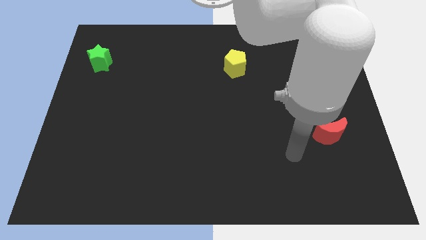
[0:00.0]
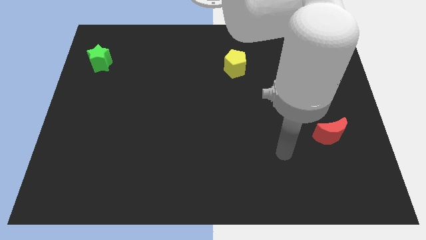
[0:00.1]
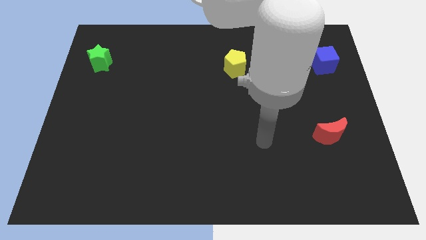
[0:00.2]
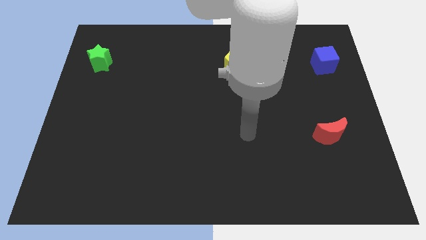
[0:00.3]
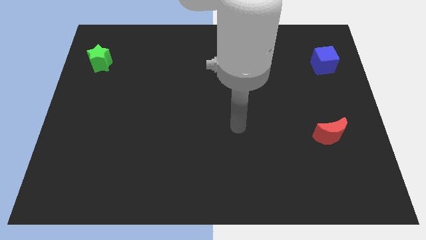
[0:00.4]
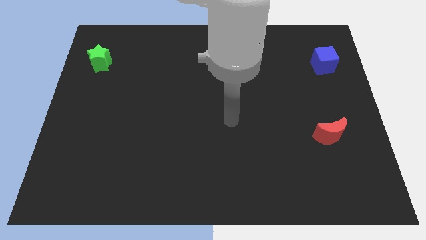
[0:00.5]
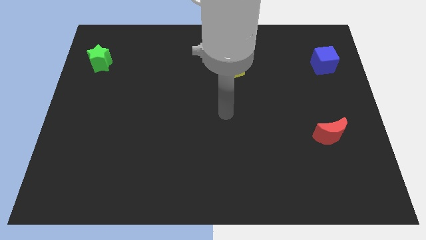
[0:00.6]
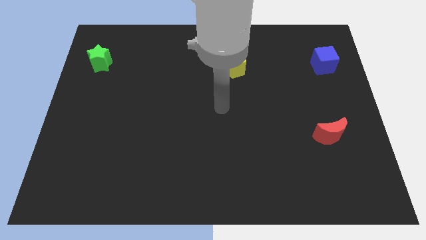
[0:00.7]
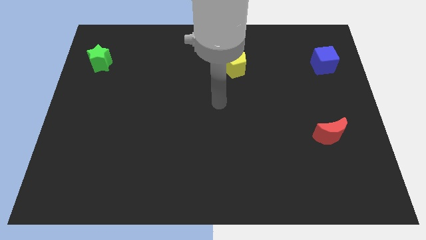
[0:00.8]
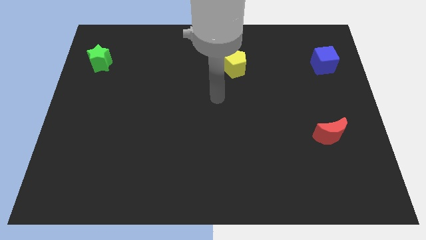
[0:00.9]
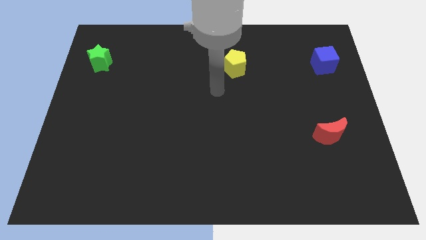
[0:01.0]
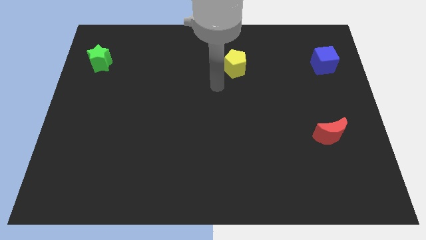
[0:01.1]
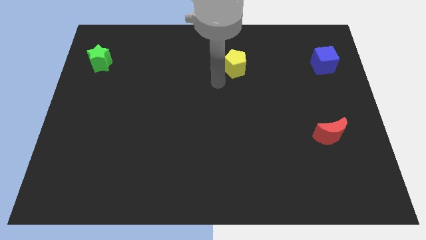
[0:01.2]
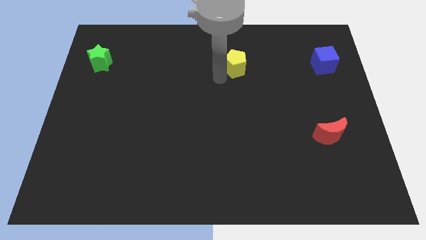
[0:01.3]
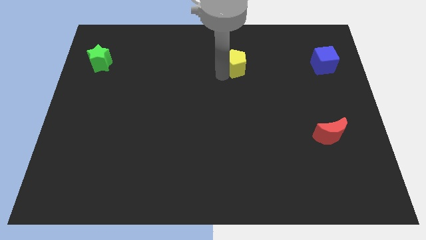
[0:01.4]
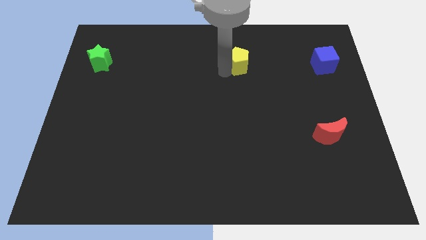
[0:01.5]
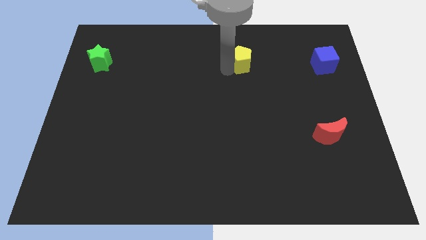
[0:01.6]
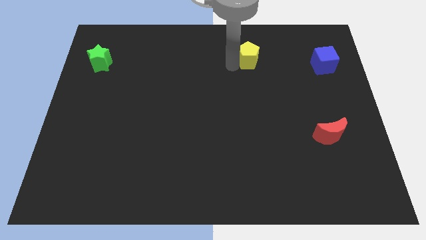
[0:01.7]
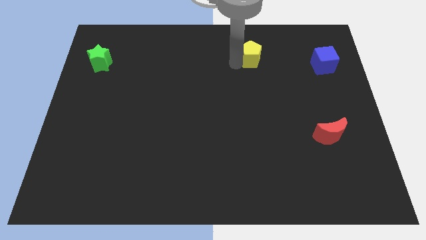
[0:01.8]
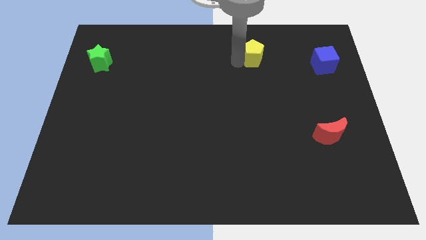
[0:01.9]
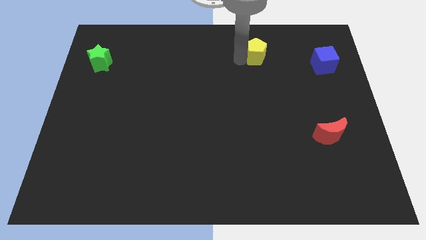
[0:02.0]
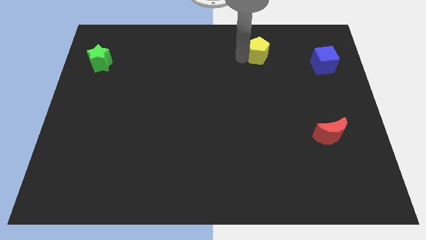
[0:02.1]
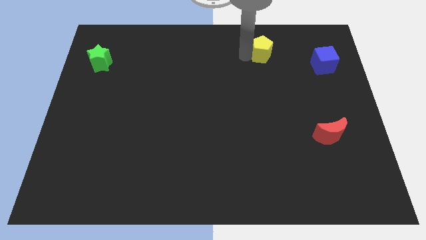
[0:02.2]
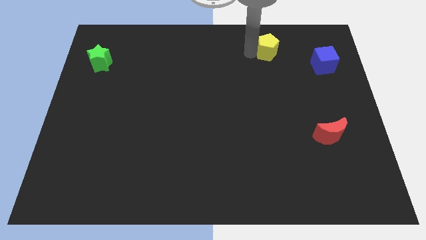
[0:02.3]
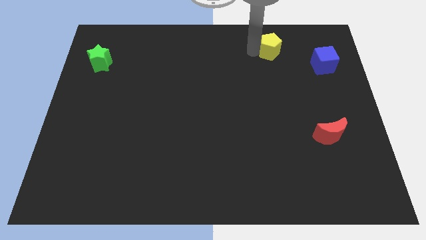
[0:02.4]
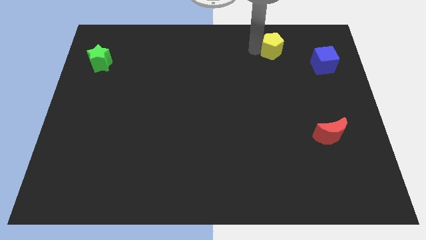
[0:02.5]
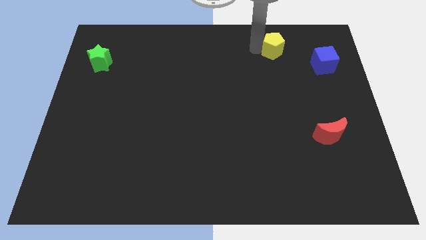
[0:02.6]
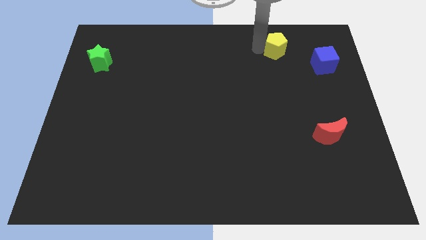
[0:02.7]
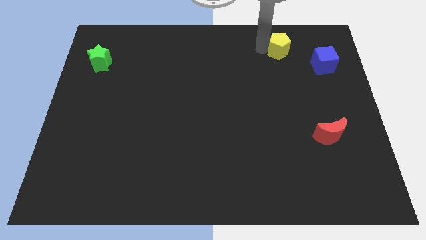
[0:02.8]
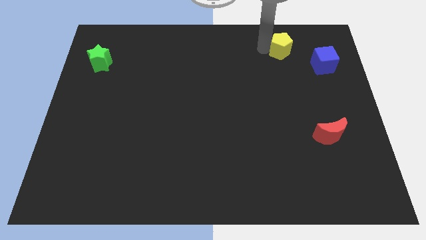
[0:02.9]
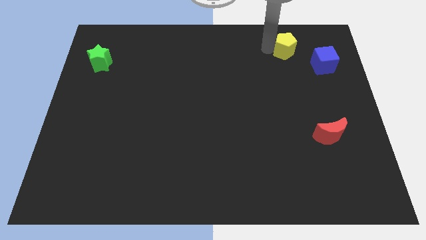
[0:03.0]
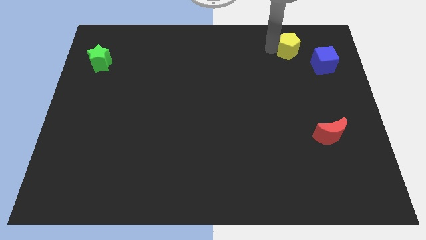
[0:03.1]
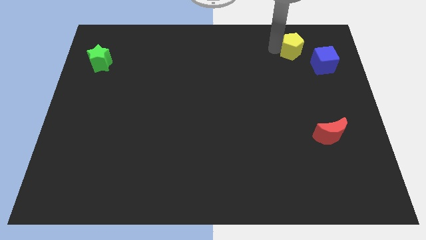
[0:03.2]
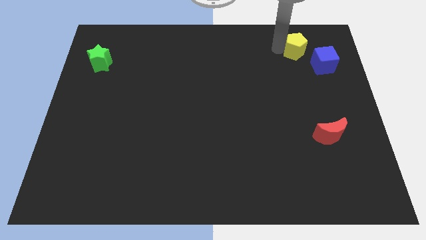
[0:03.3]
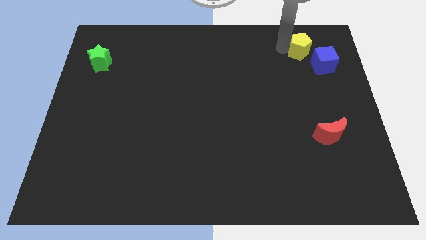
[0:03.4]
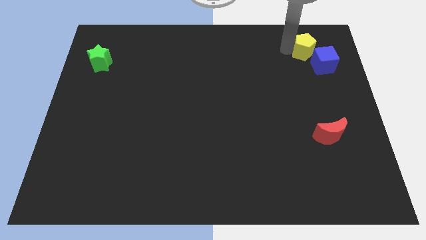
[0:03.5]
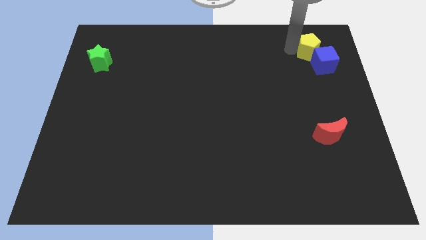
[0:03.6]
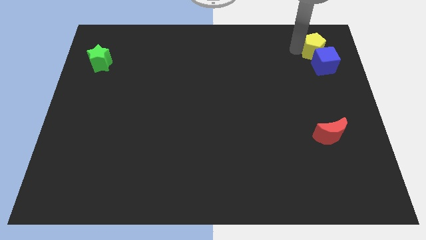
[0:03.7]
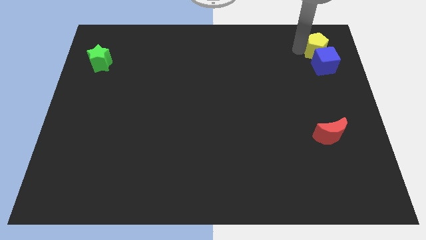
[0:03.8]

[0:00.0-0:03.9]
put the yellow block to the cube

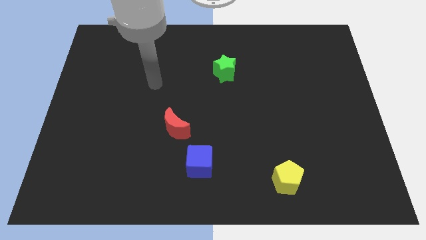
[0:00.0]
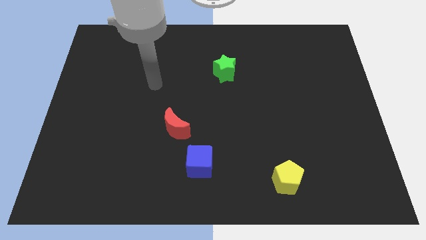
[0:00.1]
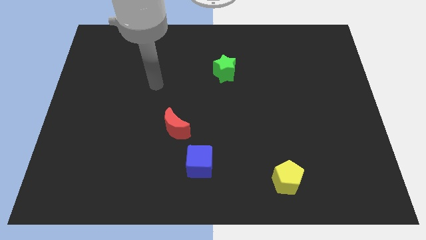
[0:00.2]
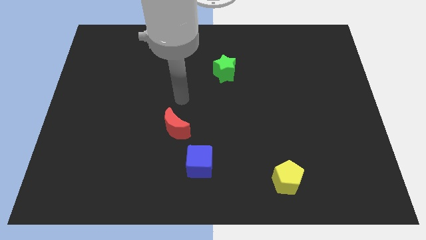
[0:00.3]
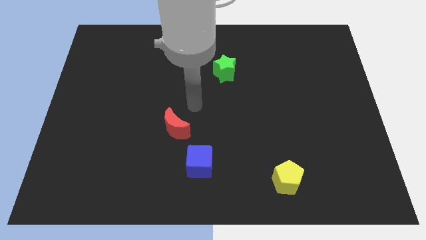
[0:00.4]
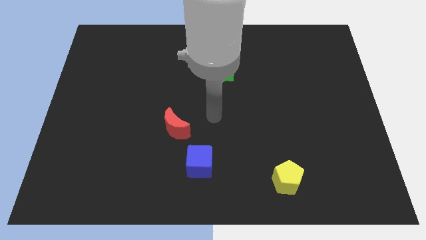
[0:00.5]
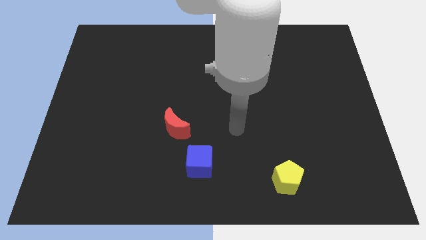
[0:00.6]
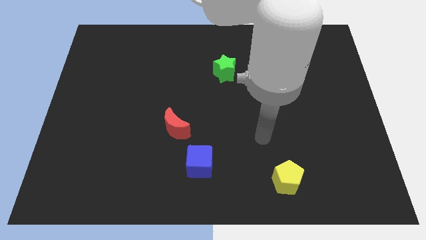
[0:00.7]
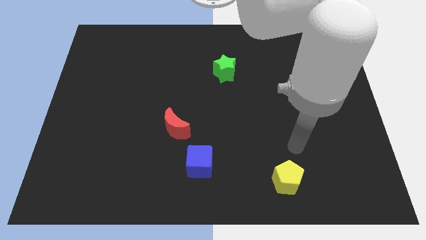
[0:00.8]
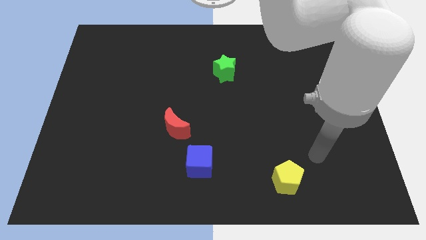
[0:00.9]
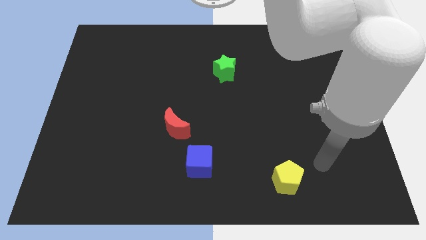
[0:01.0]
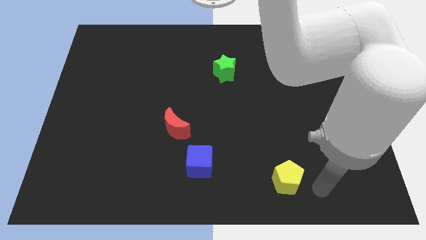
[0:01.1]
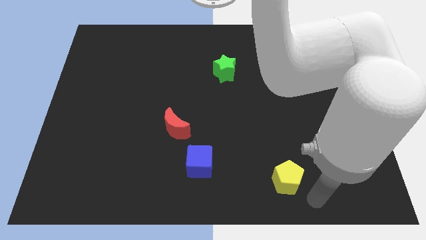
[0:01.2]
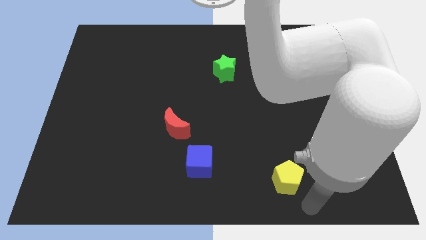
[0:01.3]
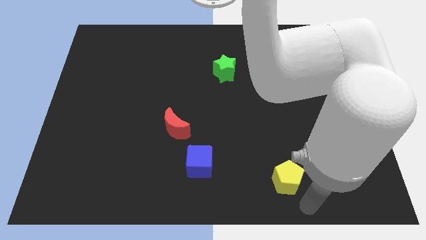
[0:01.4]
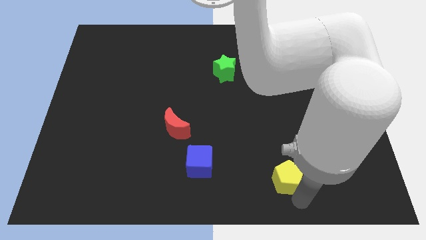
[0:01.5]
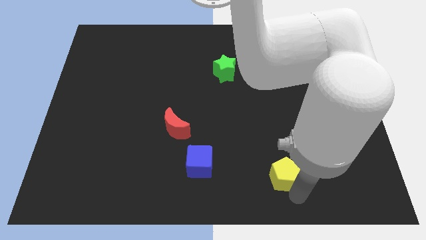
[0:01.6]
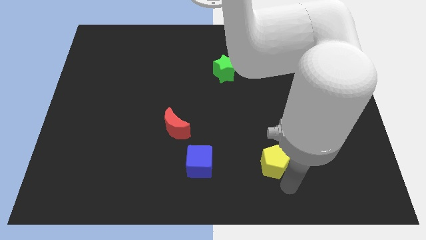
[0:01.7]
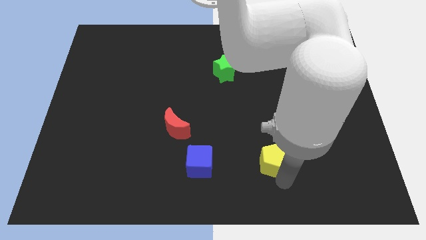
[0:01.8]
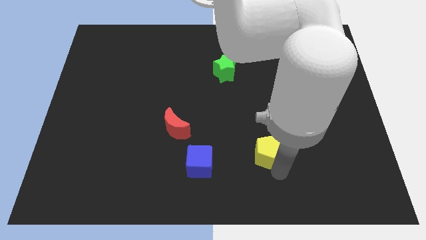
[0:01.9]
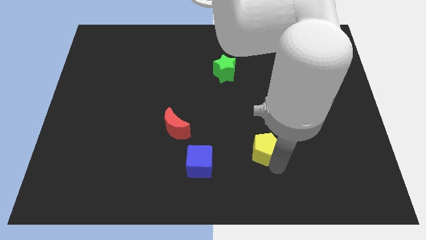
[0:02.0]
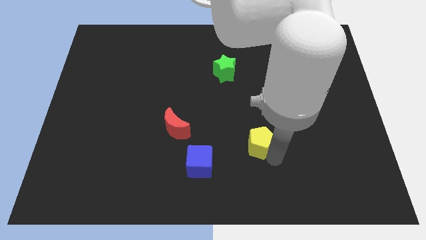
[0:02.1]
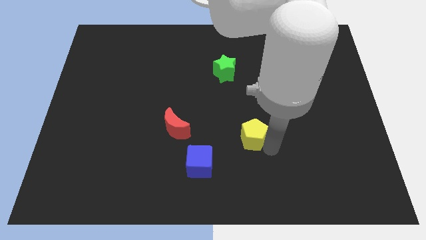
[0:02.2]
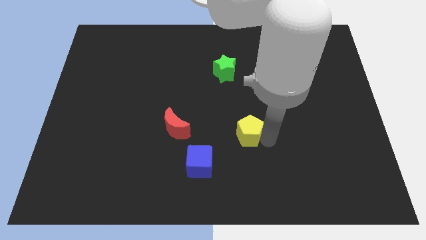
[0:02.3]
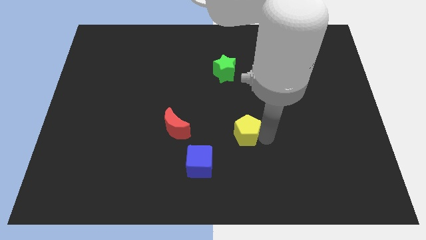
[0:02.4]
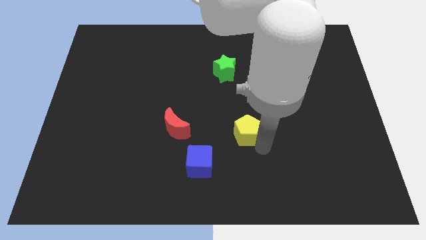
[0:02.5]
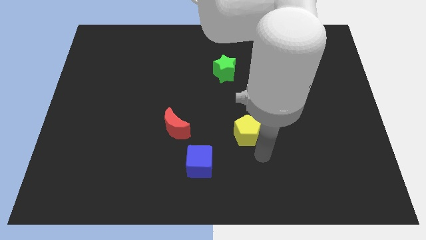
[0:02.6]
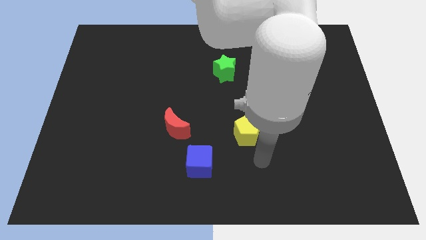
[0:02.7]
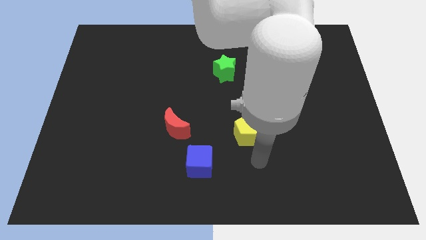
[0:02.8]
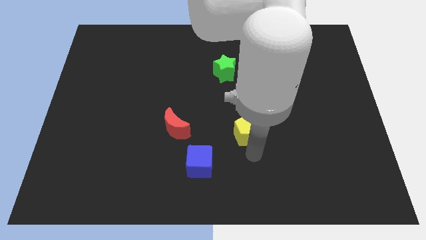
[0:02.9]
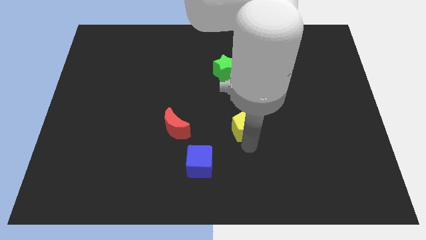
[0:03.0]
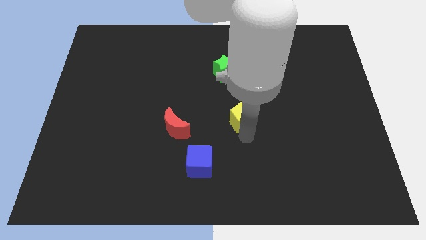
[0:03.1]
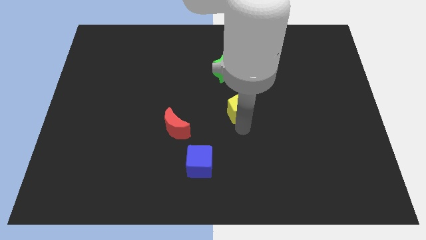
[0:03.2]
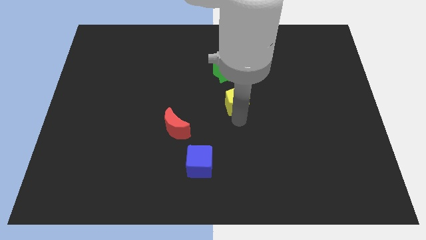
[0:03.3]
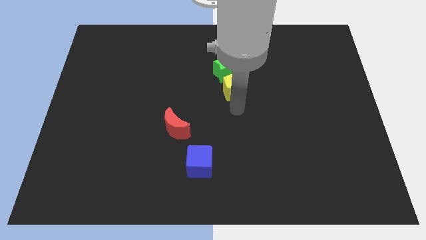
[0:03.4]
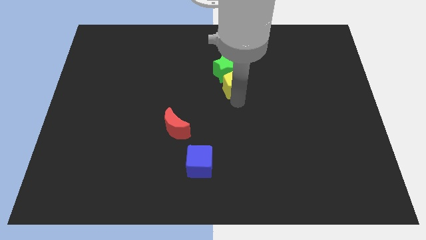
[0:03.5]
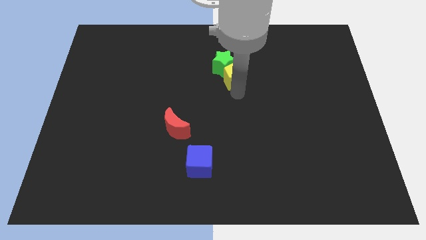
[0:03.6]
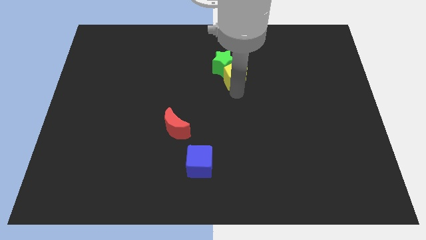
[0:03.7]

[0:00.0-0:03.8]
push the yellow pentagon towards the green star

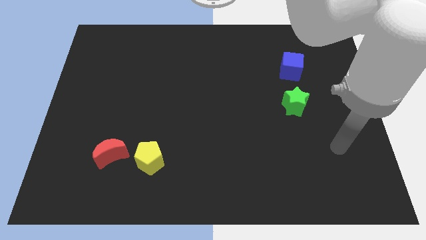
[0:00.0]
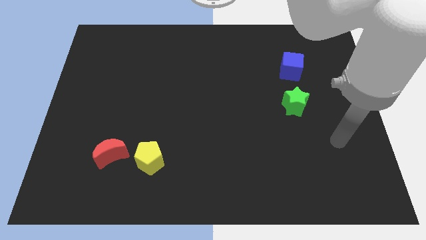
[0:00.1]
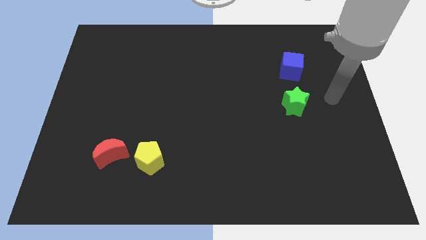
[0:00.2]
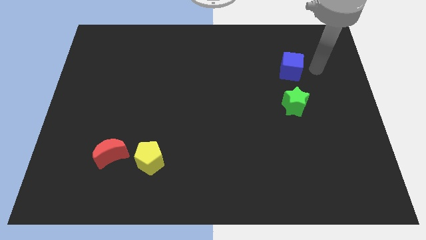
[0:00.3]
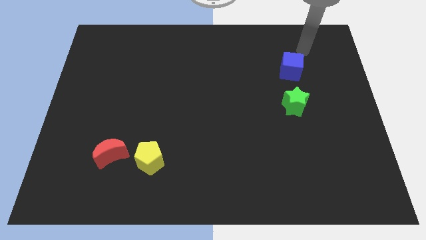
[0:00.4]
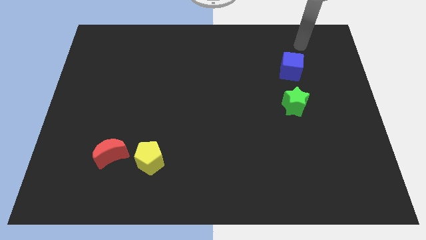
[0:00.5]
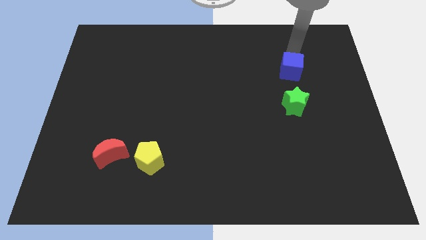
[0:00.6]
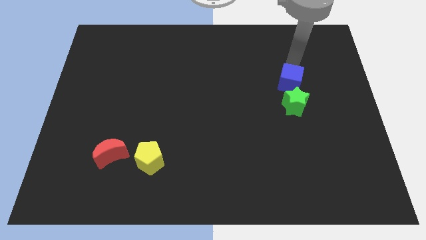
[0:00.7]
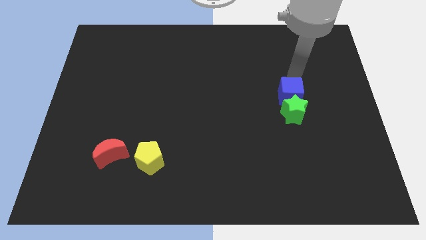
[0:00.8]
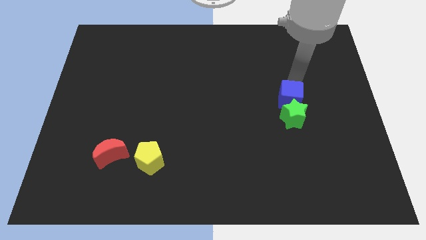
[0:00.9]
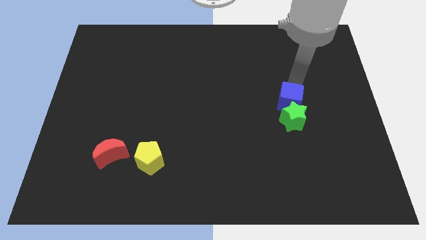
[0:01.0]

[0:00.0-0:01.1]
move the cube towards the green star
